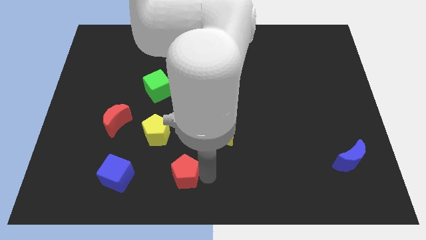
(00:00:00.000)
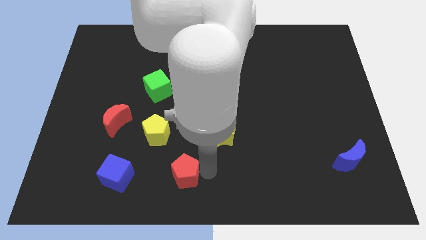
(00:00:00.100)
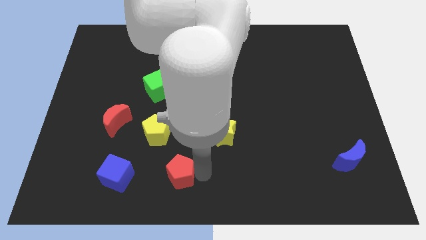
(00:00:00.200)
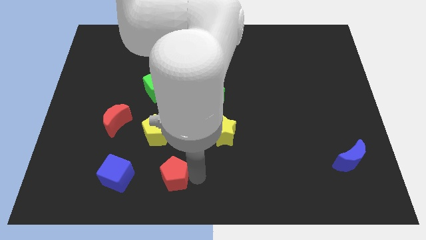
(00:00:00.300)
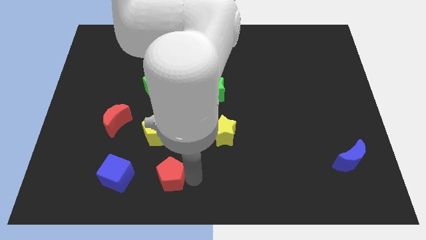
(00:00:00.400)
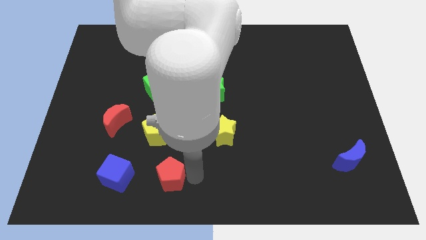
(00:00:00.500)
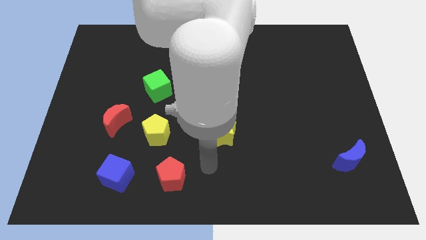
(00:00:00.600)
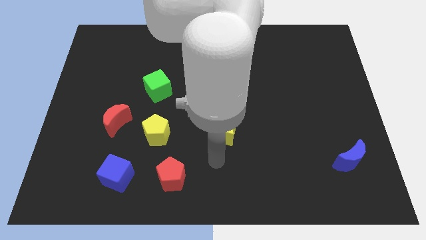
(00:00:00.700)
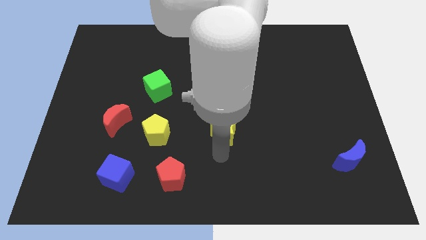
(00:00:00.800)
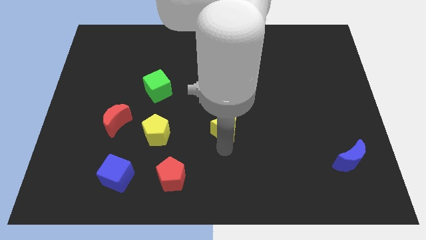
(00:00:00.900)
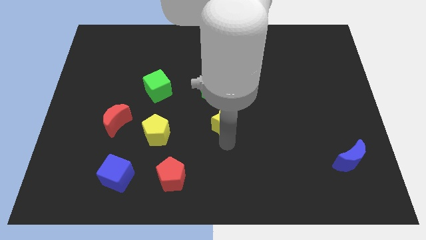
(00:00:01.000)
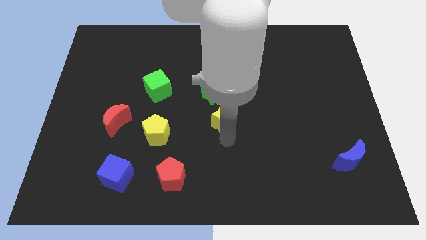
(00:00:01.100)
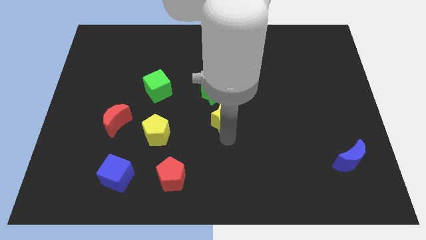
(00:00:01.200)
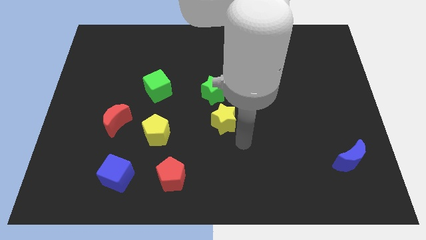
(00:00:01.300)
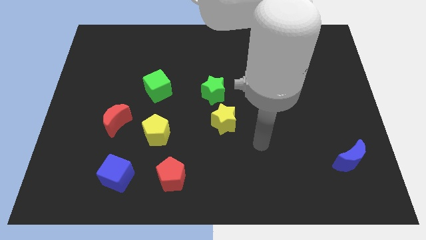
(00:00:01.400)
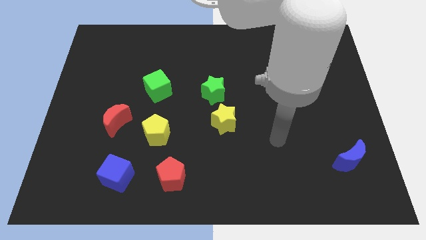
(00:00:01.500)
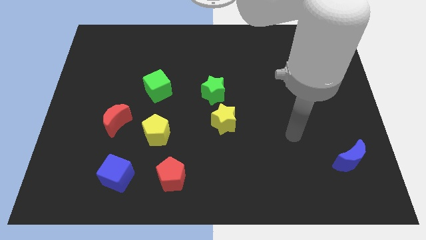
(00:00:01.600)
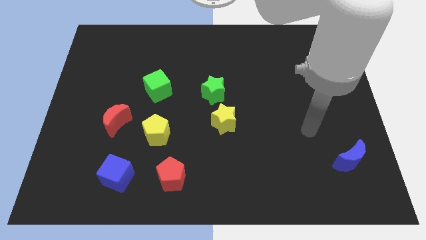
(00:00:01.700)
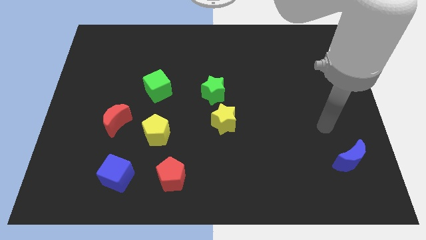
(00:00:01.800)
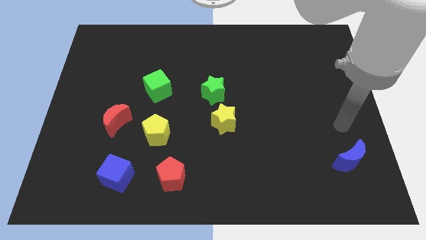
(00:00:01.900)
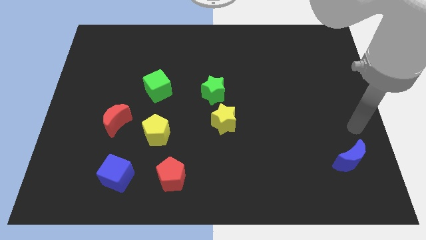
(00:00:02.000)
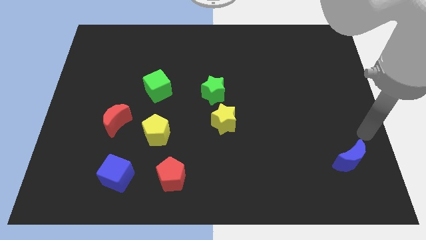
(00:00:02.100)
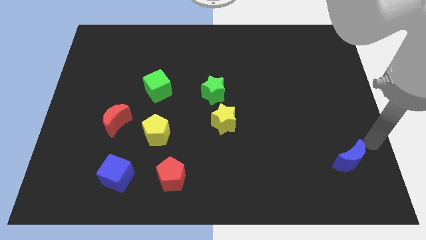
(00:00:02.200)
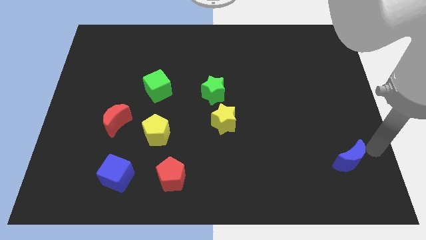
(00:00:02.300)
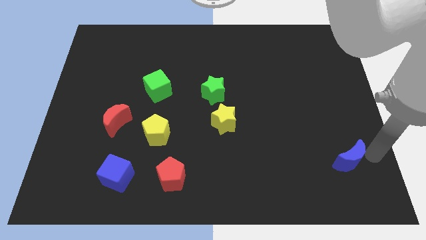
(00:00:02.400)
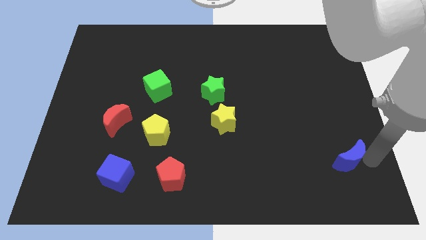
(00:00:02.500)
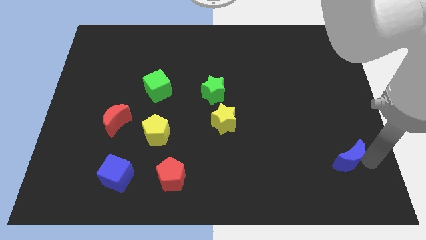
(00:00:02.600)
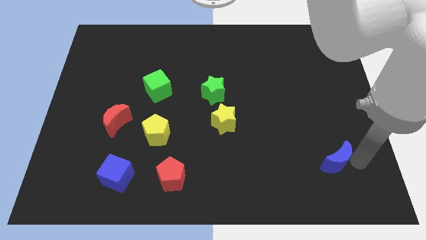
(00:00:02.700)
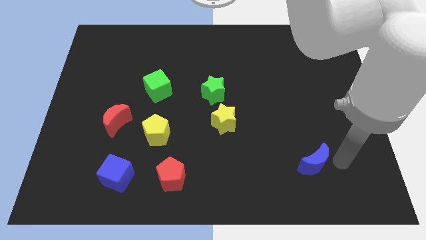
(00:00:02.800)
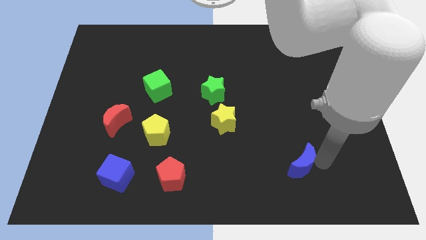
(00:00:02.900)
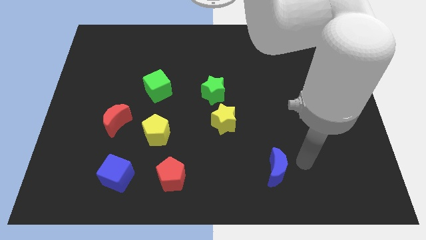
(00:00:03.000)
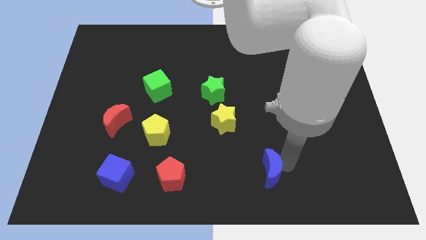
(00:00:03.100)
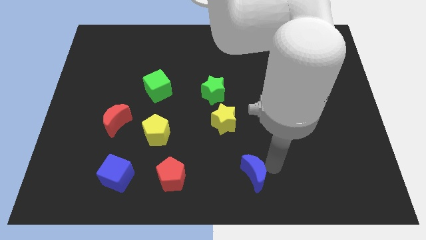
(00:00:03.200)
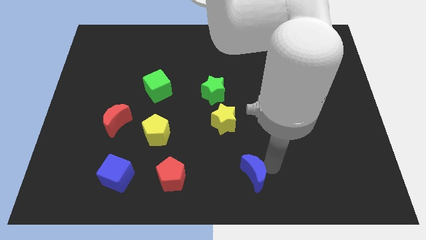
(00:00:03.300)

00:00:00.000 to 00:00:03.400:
move the blue moon parallel to the red pentagon

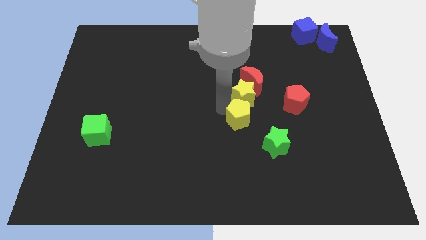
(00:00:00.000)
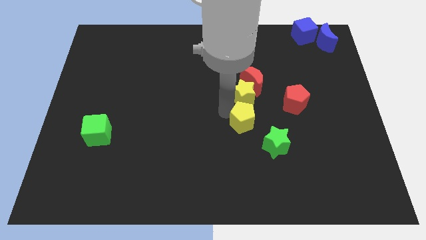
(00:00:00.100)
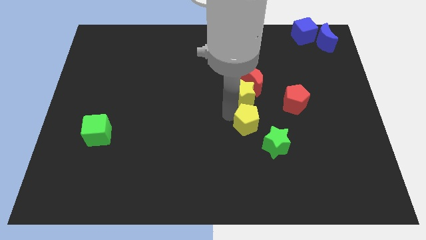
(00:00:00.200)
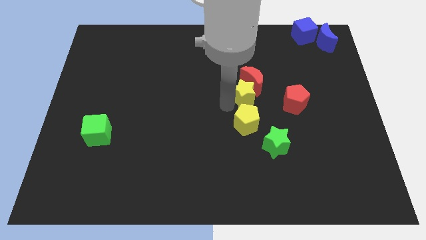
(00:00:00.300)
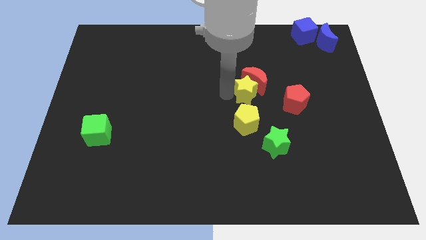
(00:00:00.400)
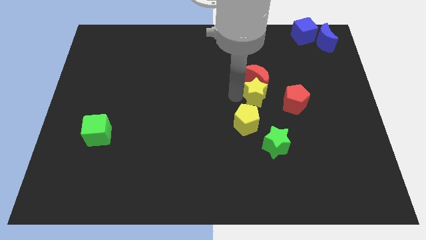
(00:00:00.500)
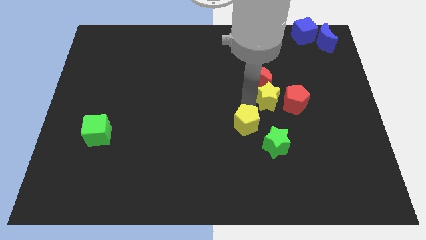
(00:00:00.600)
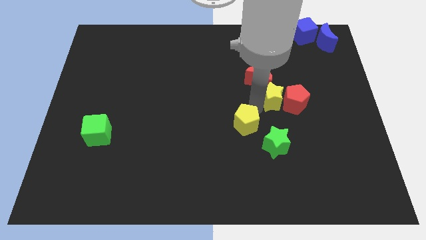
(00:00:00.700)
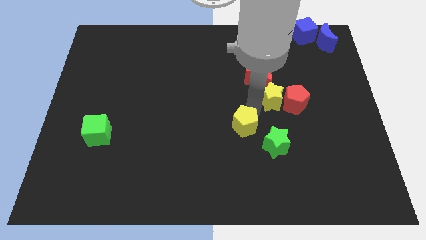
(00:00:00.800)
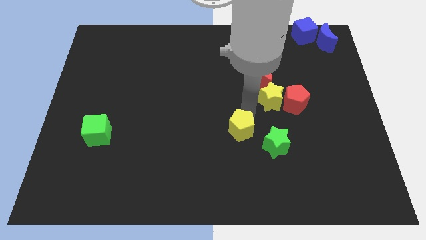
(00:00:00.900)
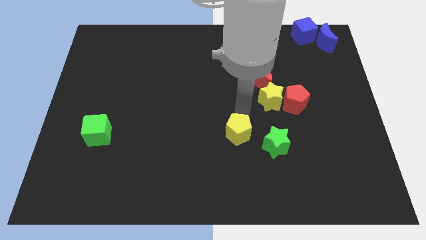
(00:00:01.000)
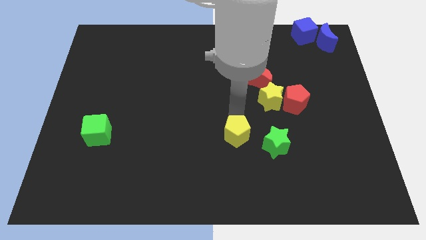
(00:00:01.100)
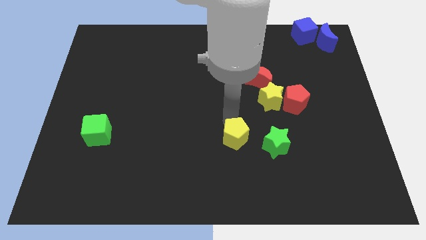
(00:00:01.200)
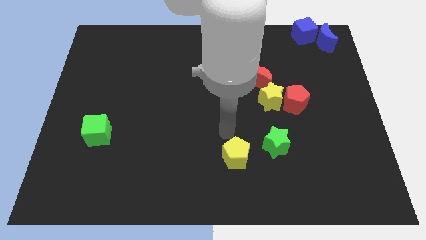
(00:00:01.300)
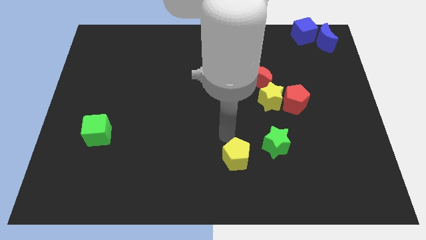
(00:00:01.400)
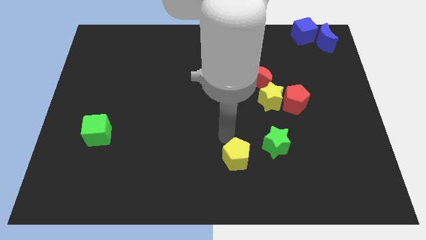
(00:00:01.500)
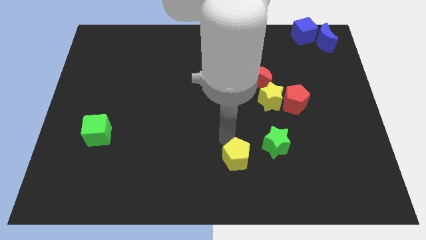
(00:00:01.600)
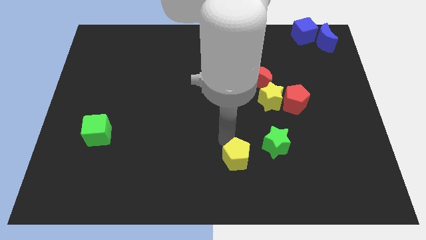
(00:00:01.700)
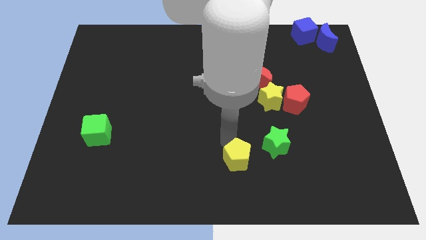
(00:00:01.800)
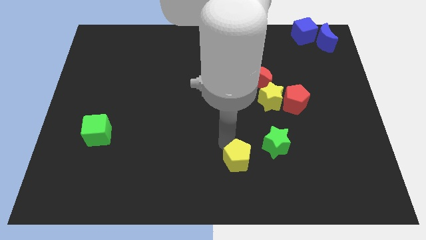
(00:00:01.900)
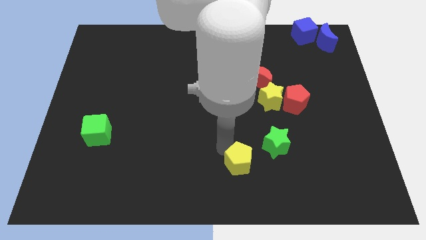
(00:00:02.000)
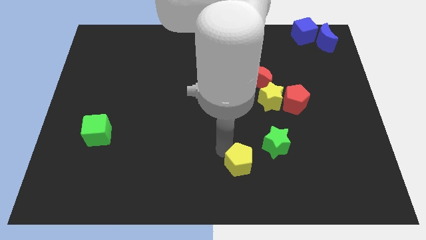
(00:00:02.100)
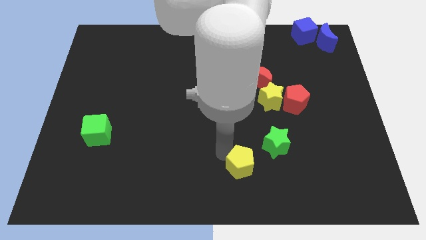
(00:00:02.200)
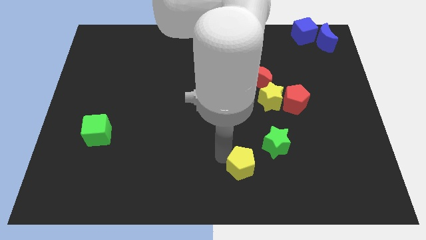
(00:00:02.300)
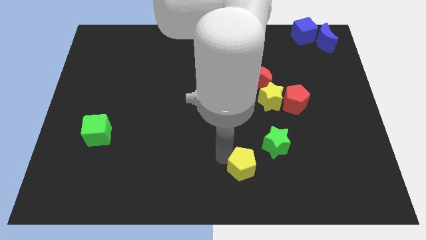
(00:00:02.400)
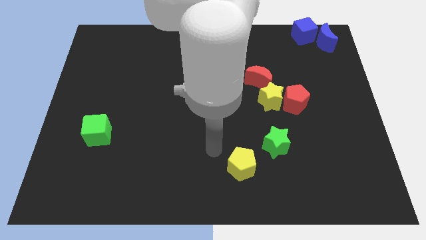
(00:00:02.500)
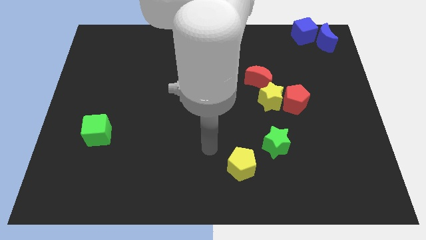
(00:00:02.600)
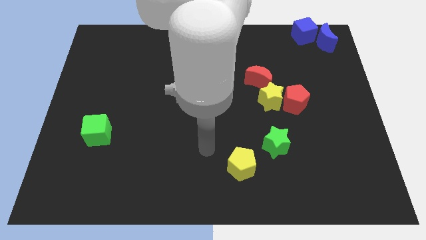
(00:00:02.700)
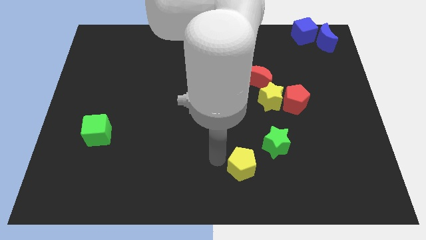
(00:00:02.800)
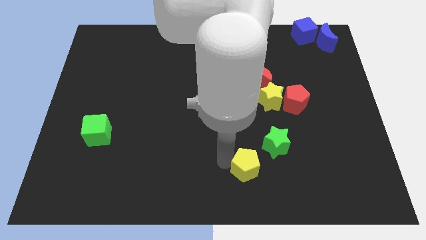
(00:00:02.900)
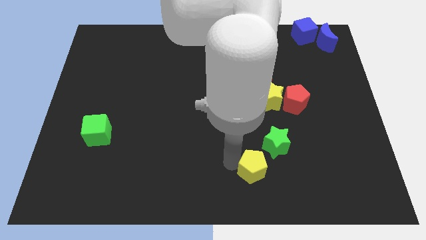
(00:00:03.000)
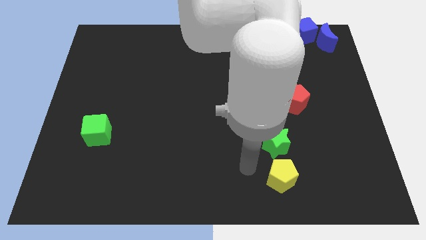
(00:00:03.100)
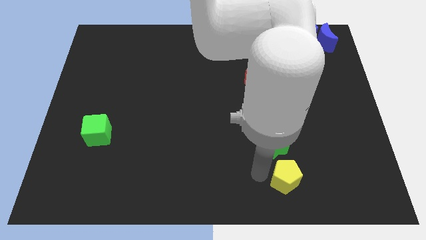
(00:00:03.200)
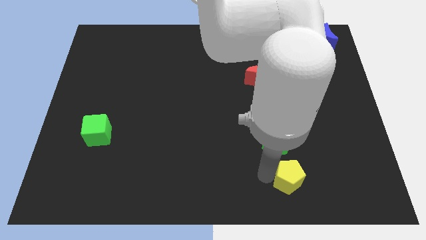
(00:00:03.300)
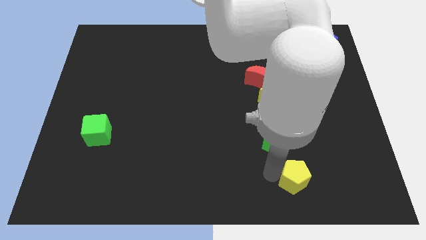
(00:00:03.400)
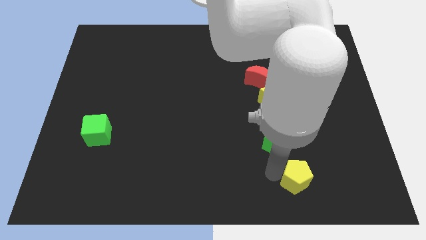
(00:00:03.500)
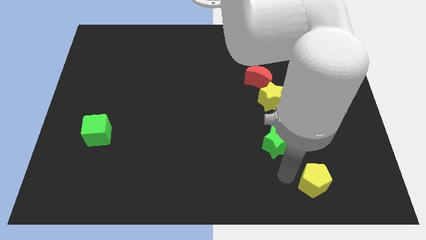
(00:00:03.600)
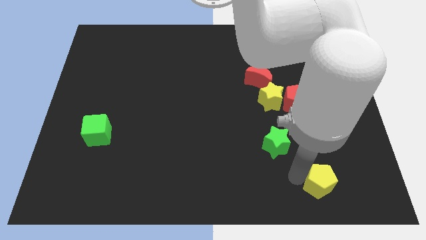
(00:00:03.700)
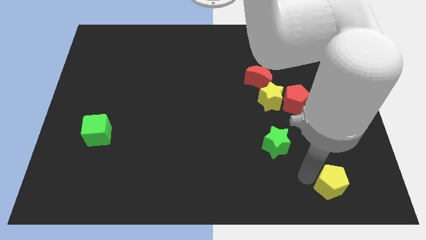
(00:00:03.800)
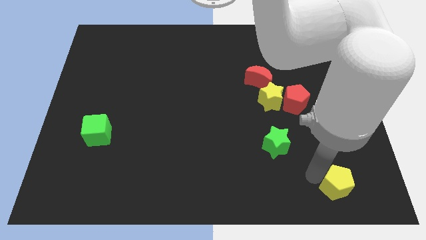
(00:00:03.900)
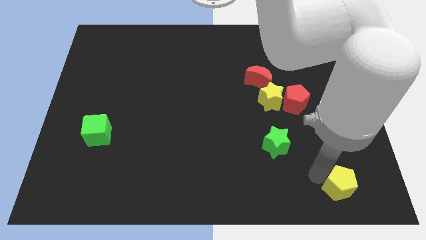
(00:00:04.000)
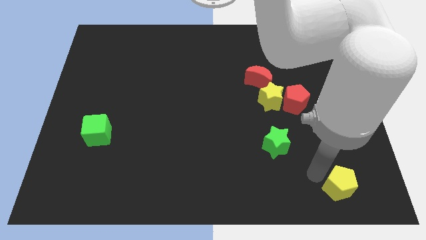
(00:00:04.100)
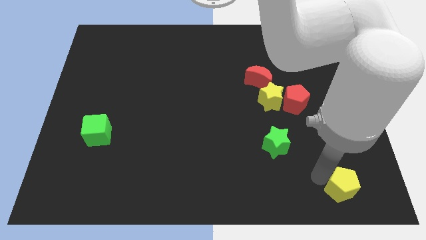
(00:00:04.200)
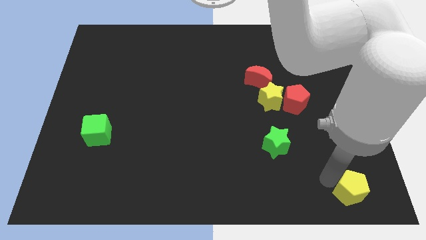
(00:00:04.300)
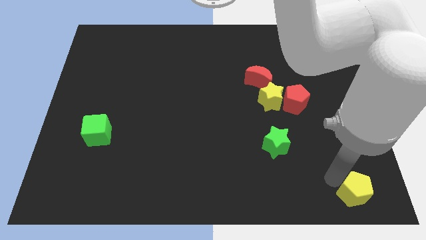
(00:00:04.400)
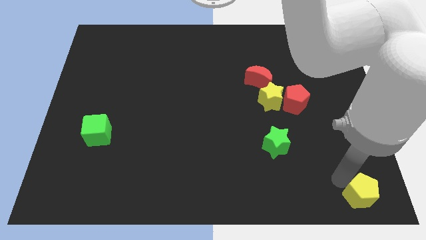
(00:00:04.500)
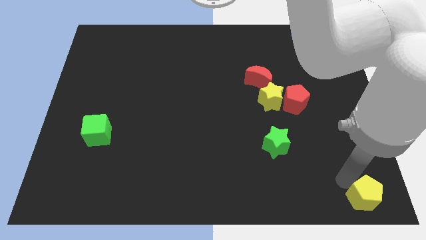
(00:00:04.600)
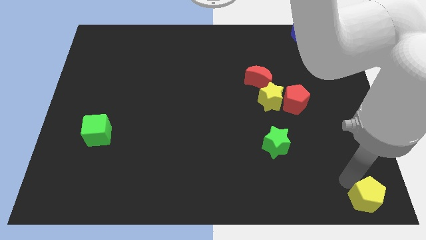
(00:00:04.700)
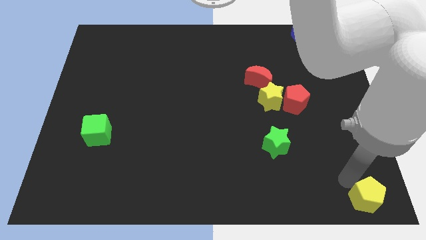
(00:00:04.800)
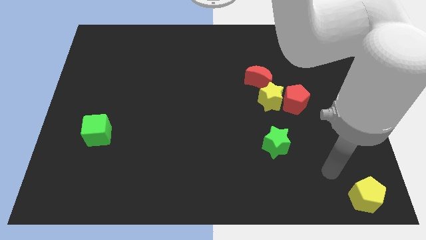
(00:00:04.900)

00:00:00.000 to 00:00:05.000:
push the yellow pentagon to the bottom left

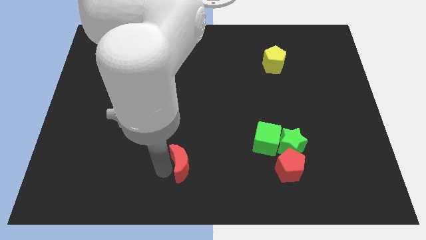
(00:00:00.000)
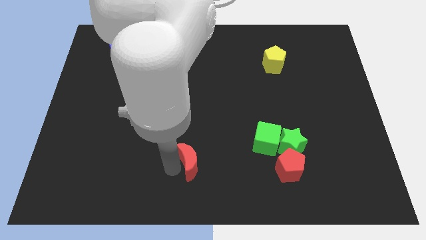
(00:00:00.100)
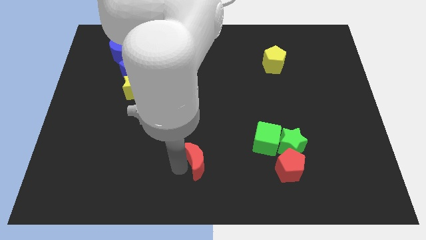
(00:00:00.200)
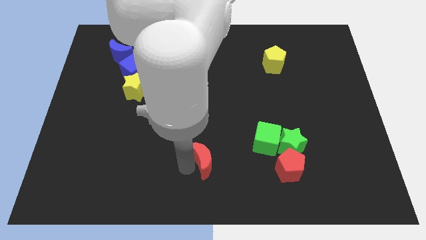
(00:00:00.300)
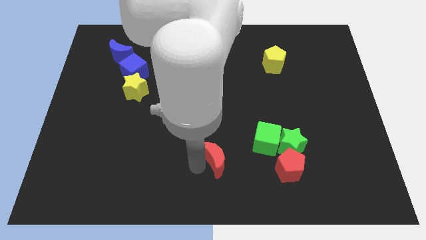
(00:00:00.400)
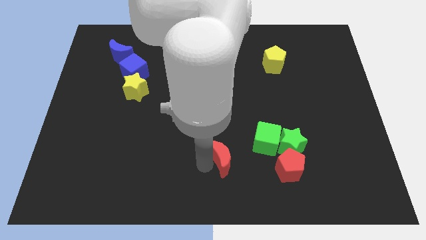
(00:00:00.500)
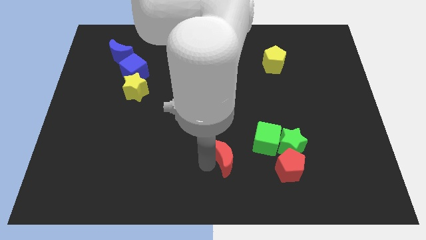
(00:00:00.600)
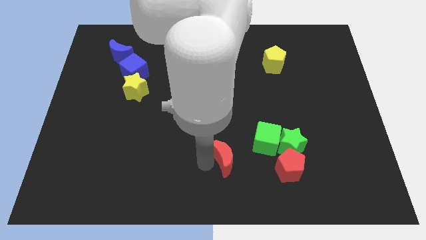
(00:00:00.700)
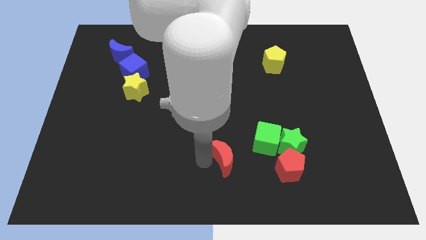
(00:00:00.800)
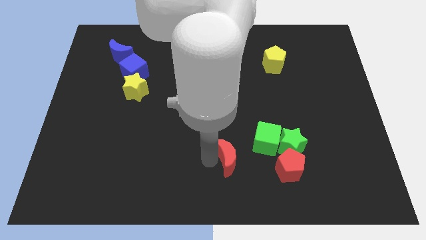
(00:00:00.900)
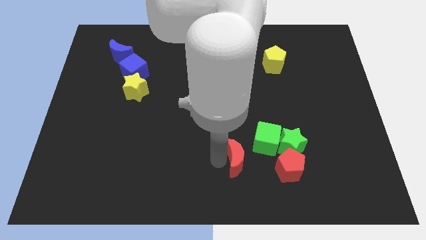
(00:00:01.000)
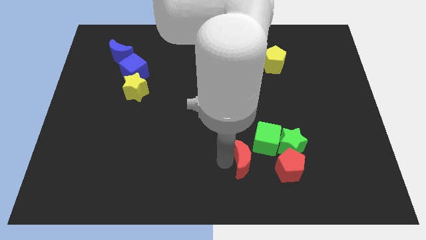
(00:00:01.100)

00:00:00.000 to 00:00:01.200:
push the red moon bottom left of the green cube
